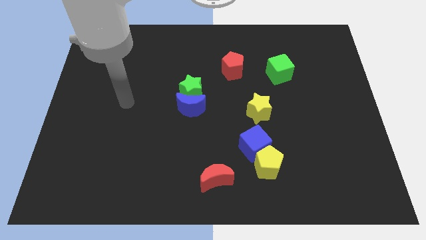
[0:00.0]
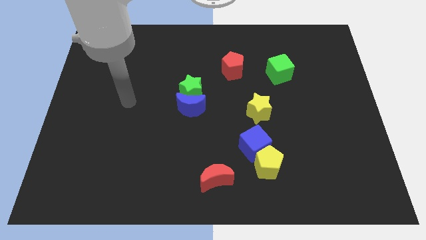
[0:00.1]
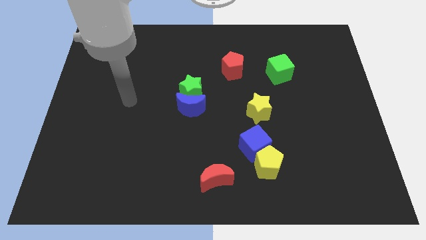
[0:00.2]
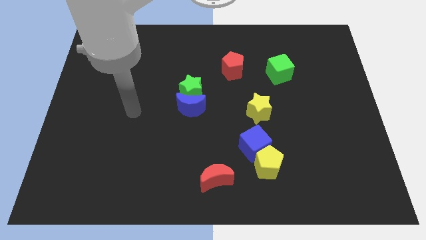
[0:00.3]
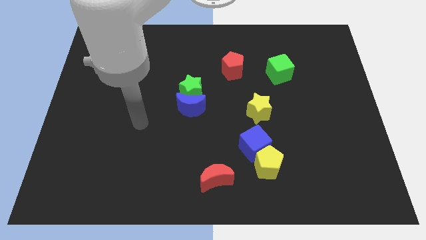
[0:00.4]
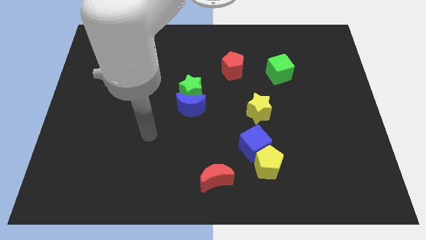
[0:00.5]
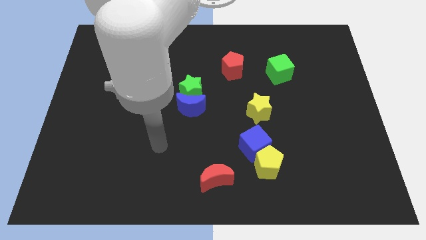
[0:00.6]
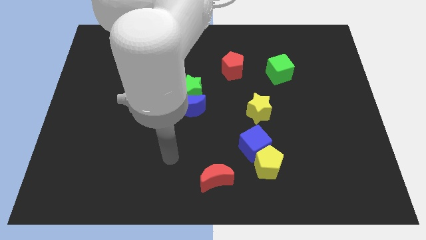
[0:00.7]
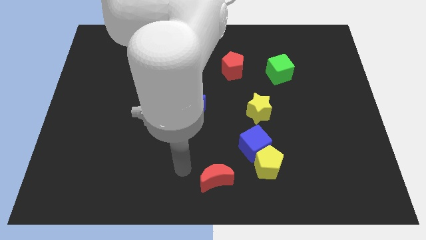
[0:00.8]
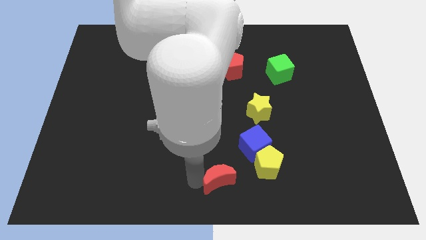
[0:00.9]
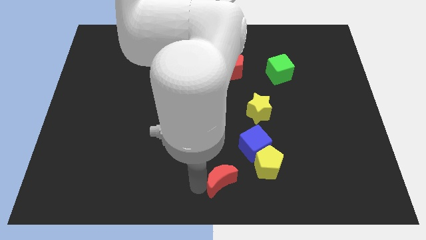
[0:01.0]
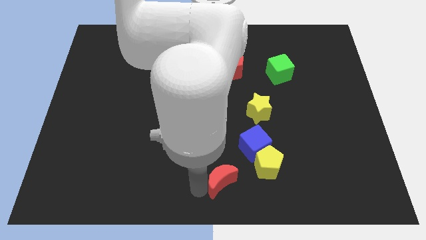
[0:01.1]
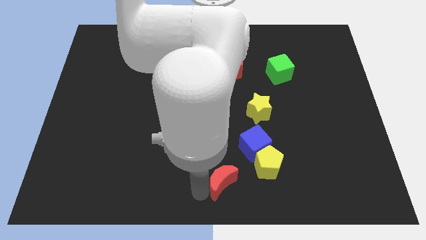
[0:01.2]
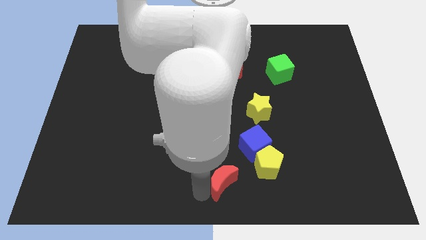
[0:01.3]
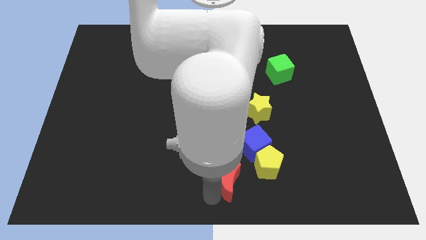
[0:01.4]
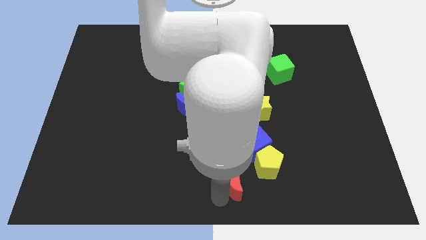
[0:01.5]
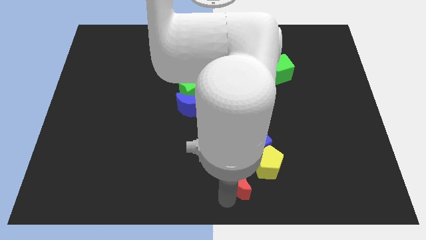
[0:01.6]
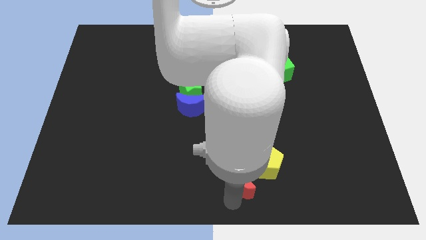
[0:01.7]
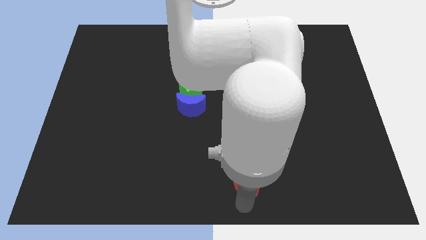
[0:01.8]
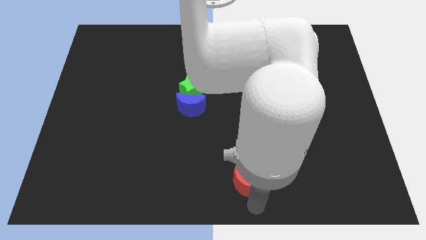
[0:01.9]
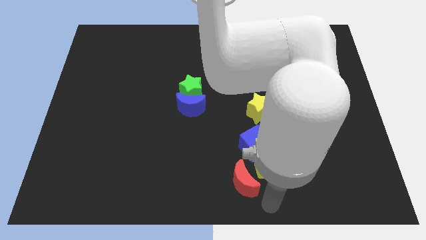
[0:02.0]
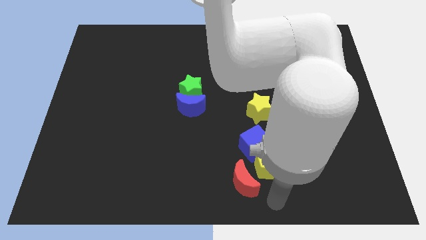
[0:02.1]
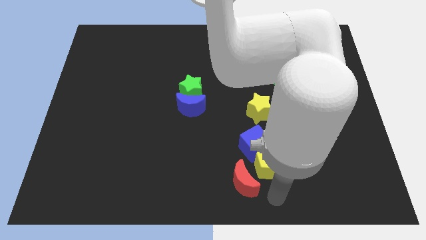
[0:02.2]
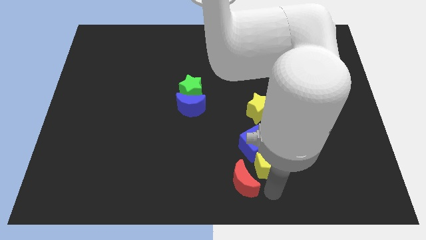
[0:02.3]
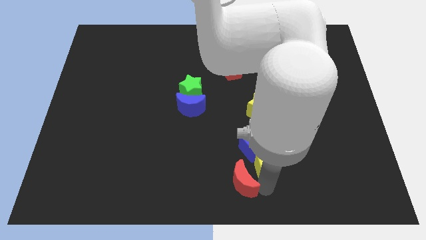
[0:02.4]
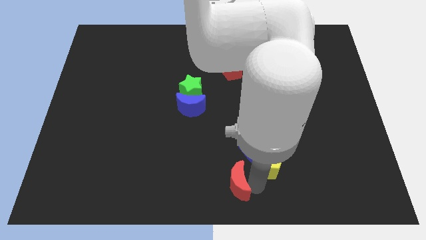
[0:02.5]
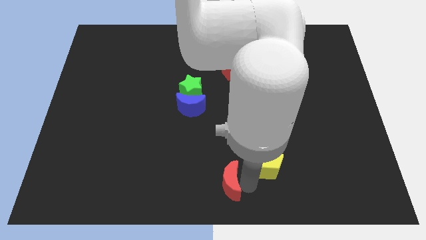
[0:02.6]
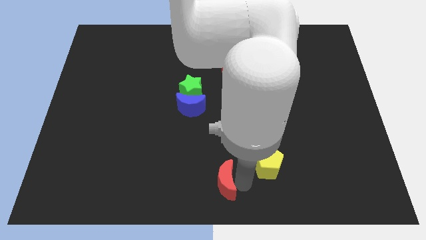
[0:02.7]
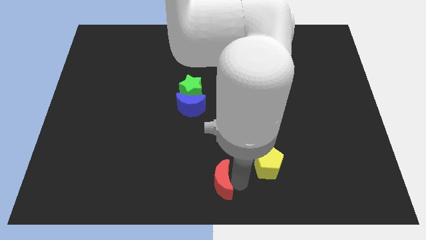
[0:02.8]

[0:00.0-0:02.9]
place the arm in between the red crescent and yellow pentagon

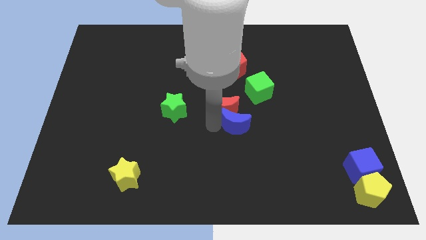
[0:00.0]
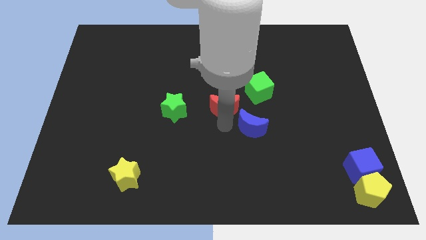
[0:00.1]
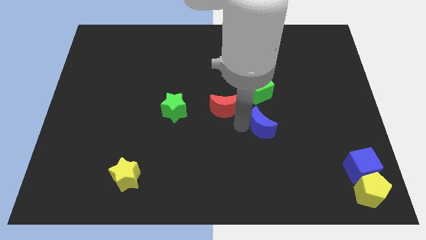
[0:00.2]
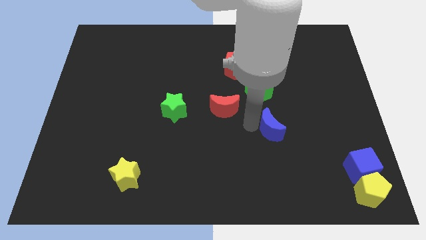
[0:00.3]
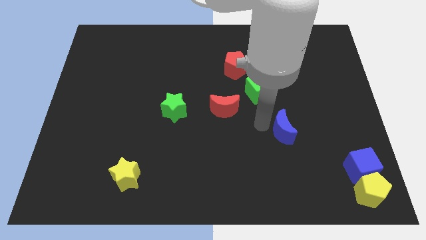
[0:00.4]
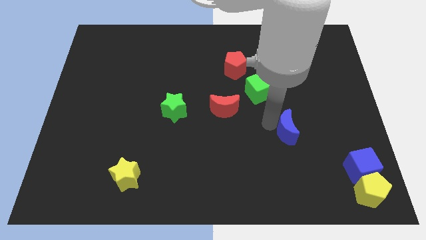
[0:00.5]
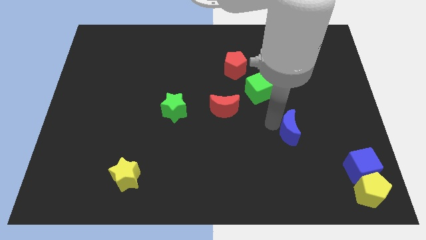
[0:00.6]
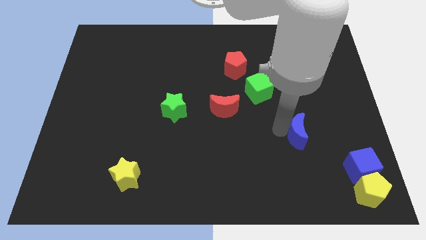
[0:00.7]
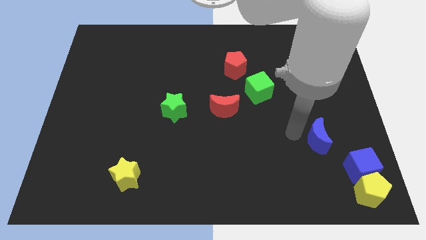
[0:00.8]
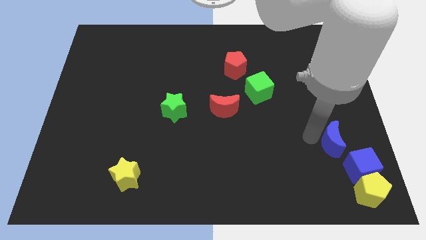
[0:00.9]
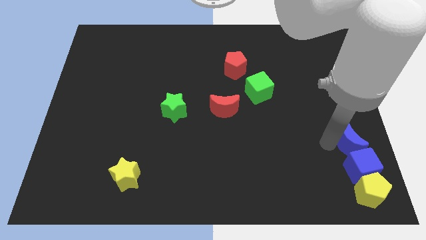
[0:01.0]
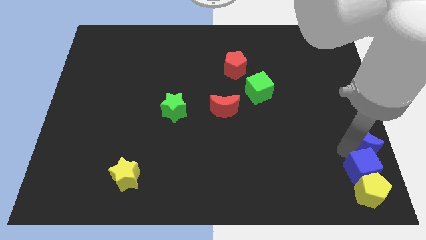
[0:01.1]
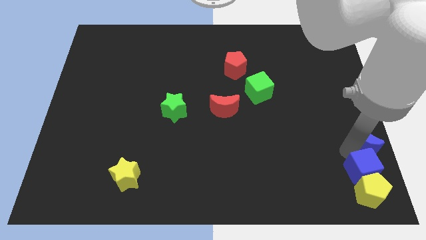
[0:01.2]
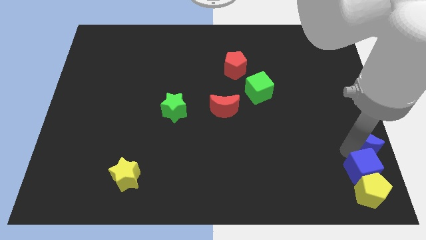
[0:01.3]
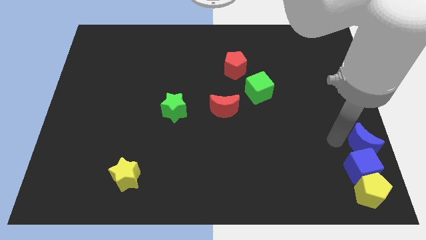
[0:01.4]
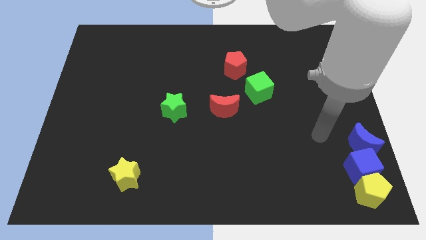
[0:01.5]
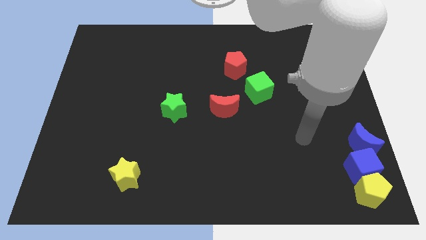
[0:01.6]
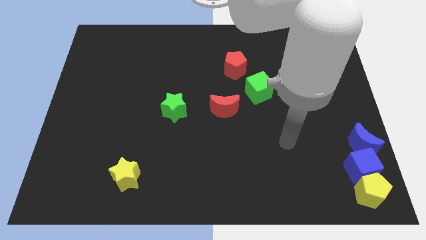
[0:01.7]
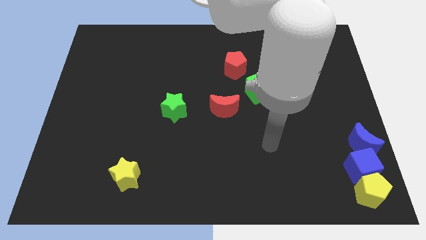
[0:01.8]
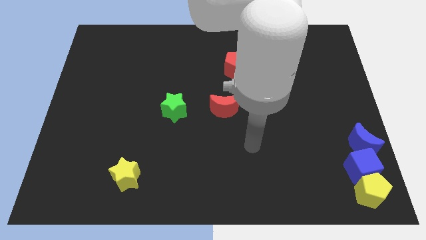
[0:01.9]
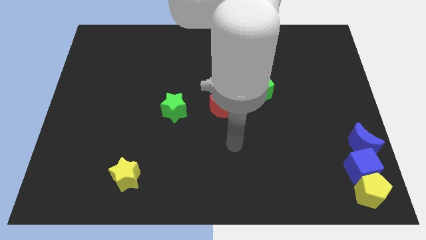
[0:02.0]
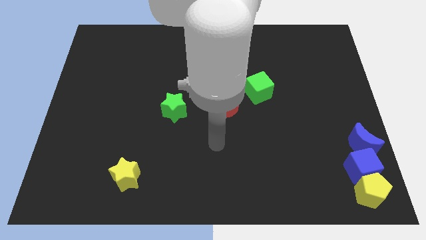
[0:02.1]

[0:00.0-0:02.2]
place the blue crescent above the blue cube

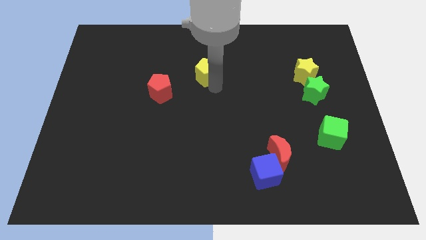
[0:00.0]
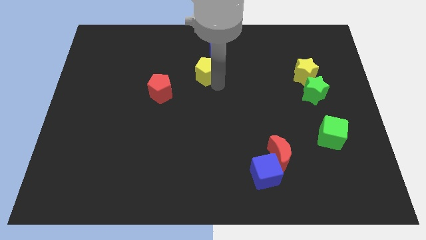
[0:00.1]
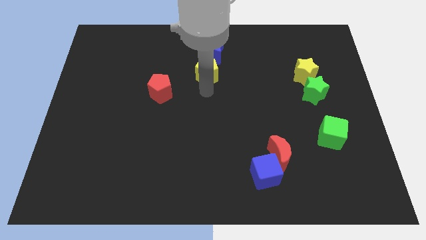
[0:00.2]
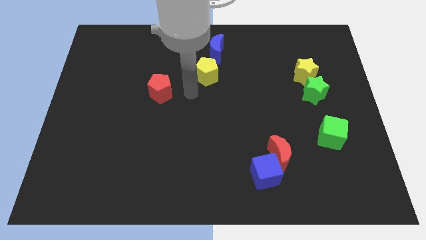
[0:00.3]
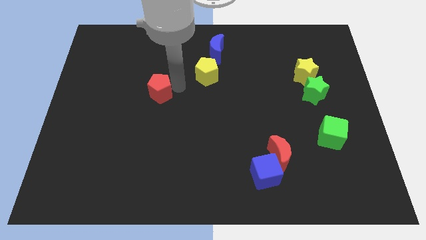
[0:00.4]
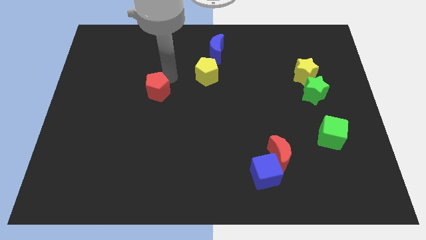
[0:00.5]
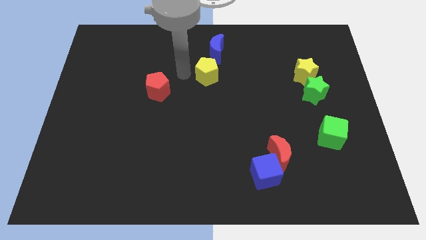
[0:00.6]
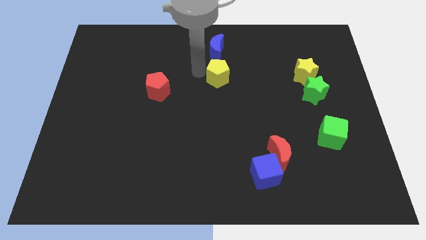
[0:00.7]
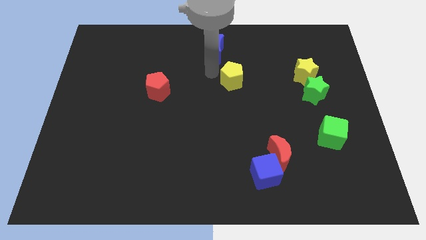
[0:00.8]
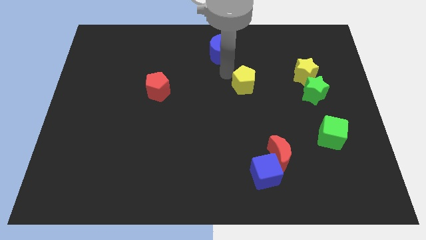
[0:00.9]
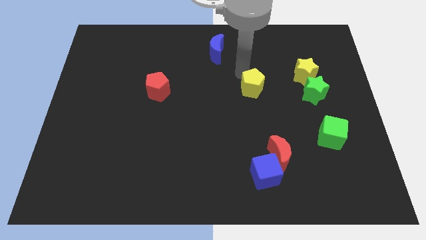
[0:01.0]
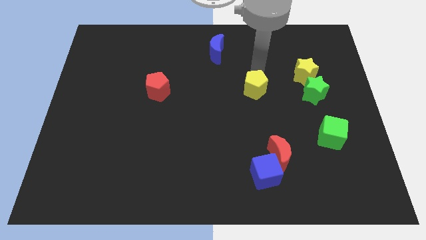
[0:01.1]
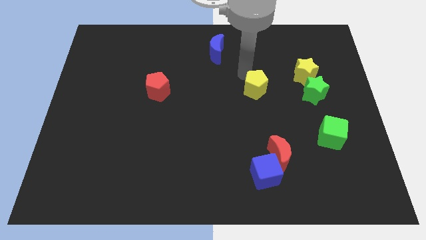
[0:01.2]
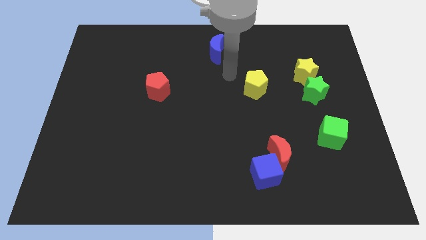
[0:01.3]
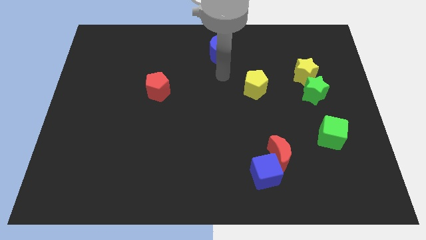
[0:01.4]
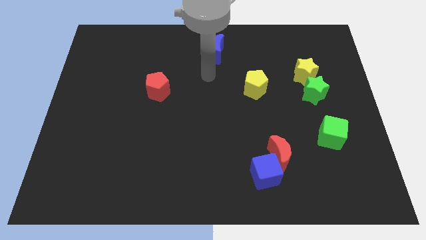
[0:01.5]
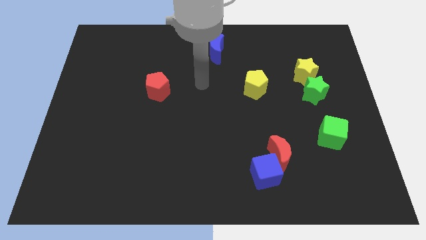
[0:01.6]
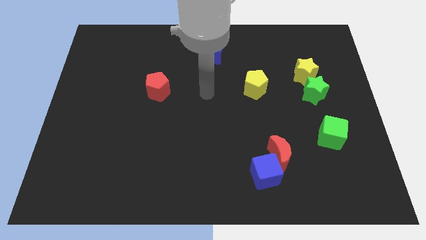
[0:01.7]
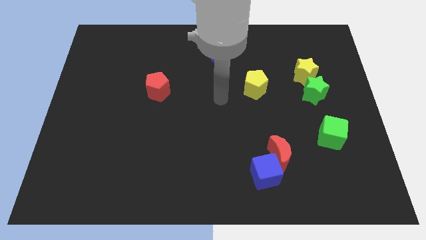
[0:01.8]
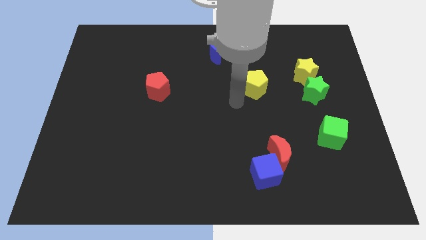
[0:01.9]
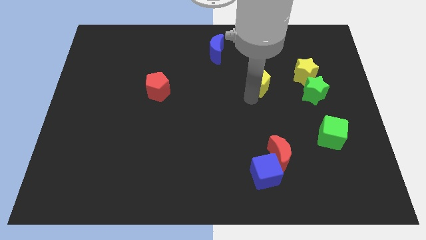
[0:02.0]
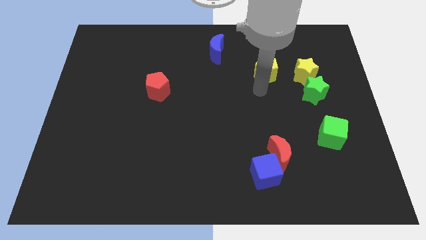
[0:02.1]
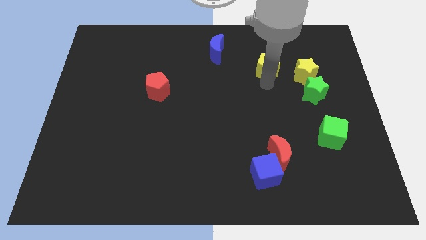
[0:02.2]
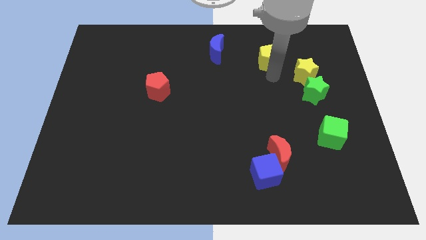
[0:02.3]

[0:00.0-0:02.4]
place the yellow pentagon left to the yellow star

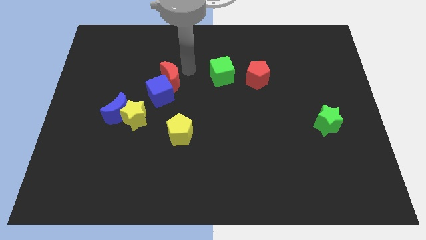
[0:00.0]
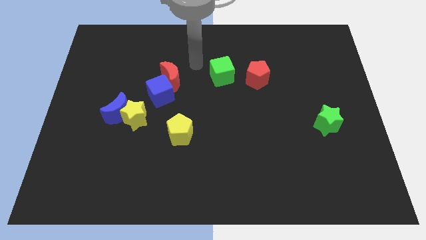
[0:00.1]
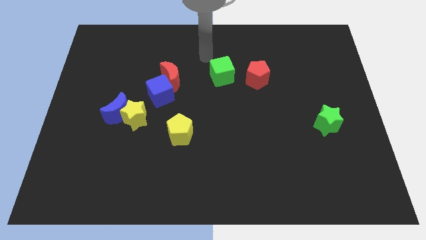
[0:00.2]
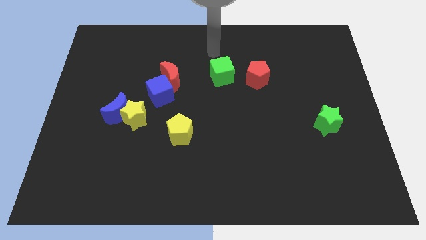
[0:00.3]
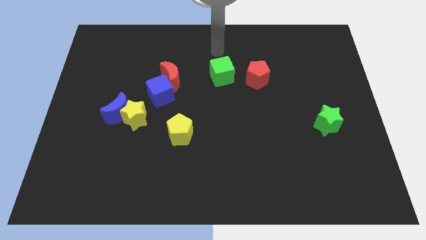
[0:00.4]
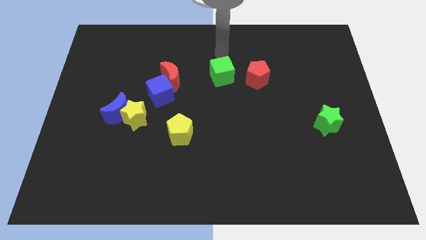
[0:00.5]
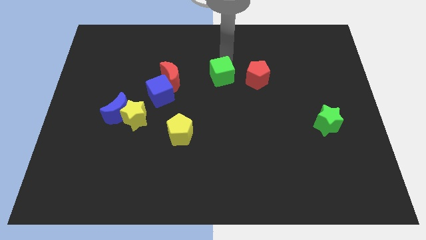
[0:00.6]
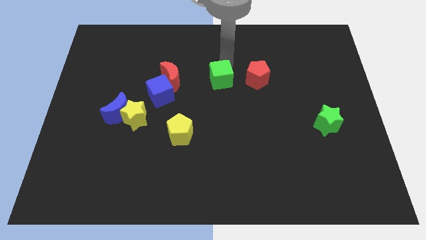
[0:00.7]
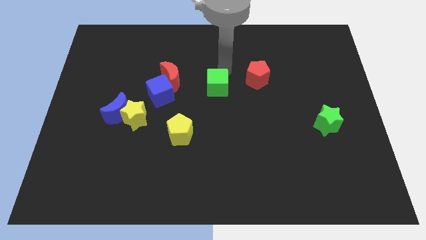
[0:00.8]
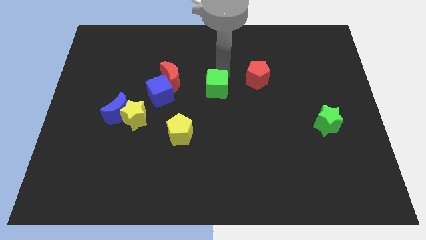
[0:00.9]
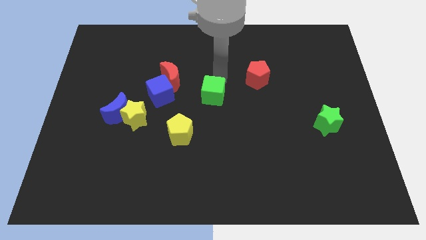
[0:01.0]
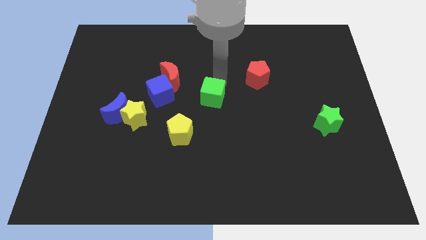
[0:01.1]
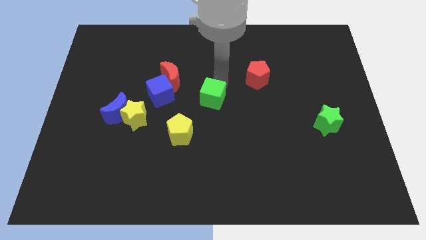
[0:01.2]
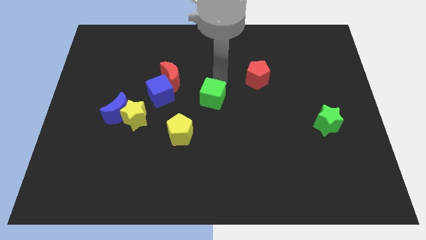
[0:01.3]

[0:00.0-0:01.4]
push the green cube to the right of the blue cube
